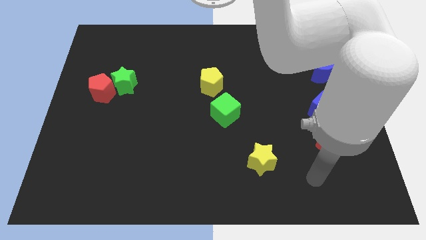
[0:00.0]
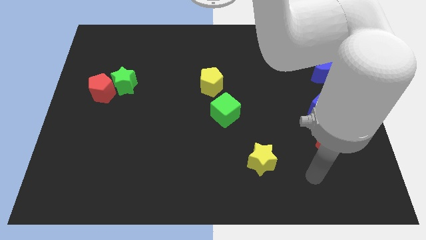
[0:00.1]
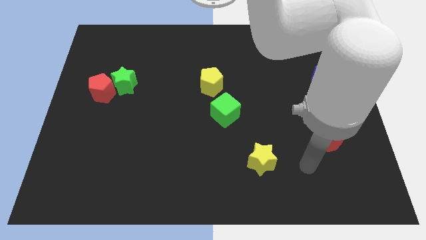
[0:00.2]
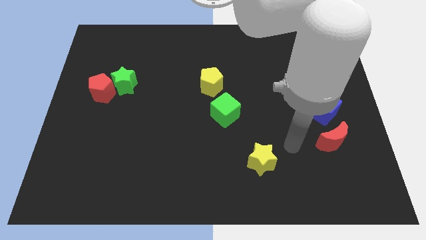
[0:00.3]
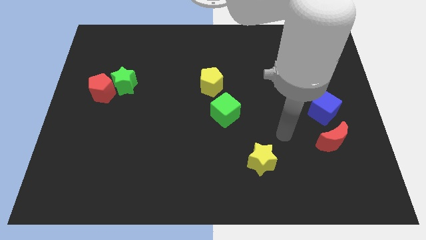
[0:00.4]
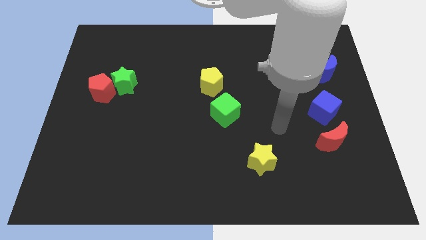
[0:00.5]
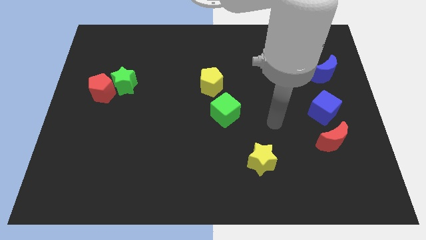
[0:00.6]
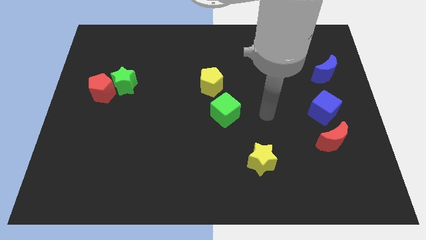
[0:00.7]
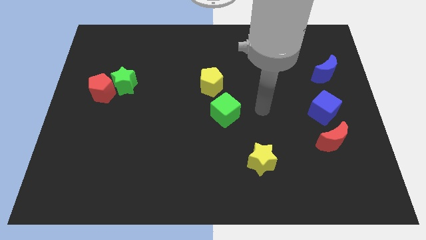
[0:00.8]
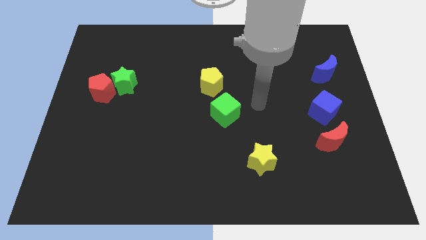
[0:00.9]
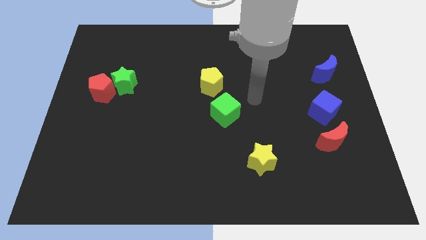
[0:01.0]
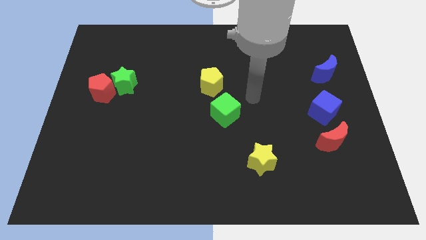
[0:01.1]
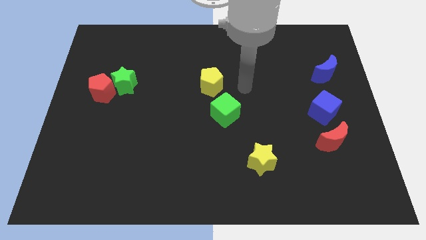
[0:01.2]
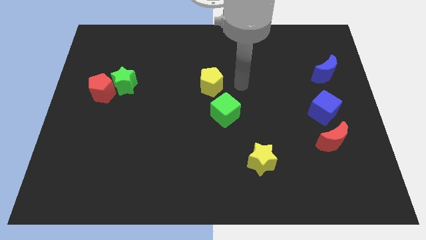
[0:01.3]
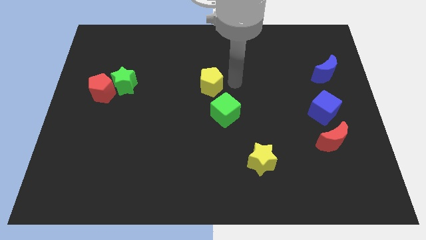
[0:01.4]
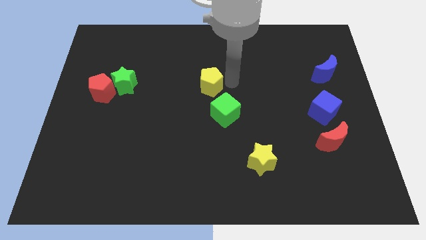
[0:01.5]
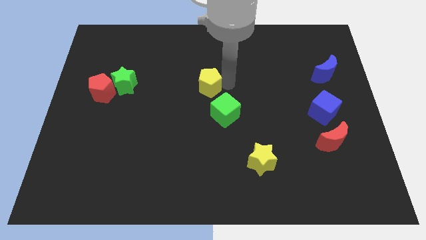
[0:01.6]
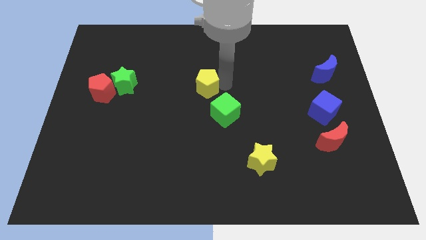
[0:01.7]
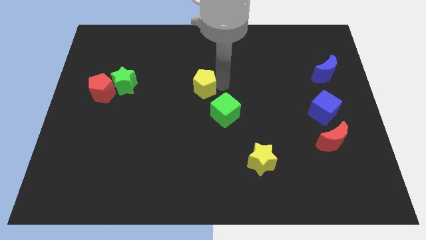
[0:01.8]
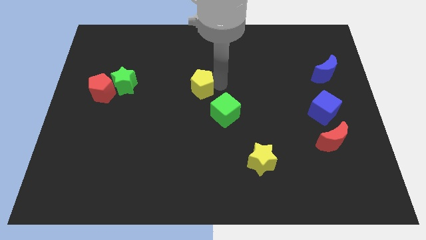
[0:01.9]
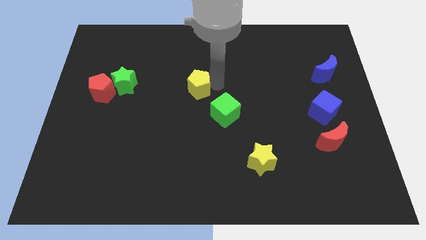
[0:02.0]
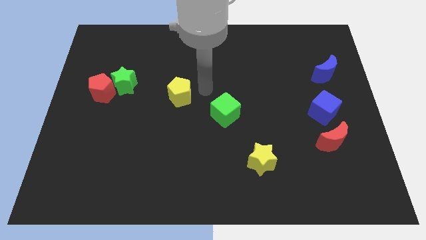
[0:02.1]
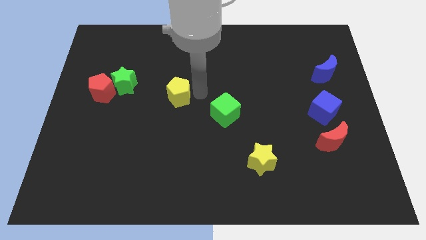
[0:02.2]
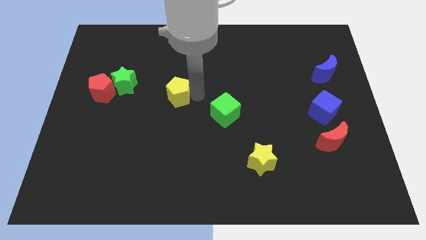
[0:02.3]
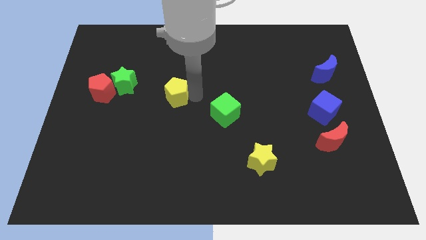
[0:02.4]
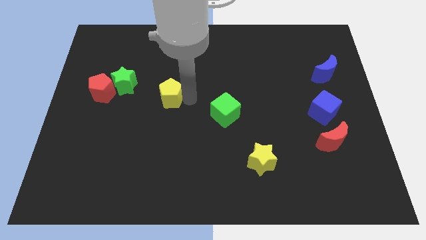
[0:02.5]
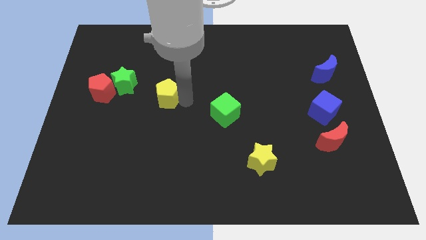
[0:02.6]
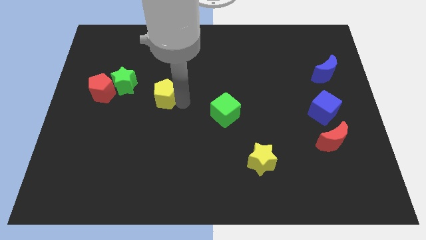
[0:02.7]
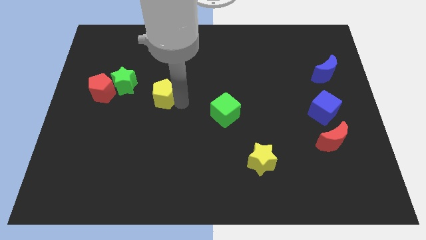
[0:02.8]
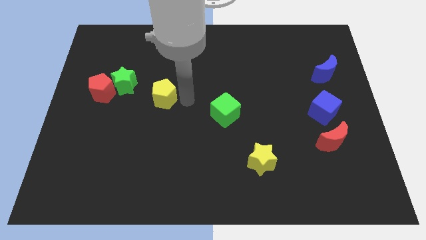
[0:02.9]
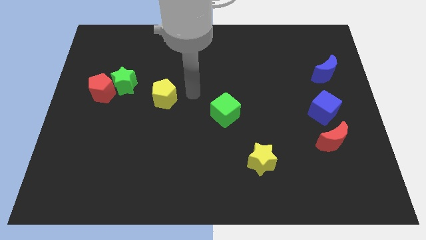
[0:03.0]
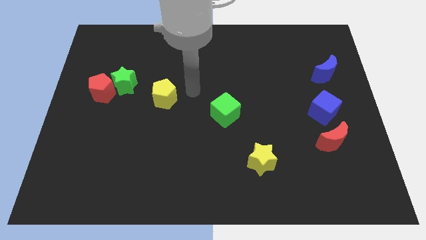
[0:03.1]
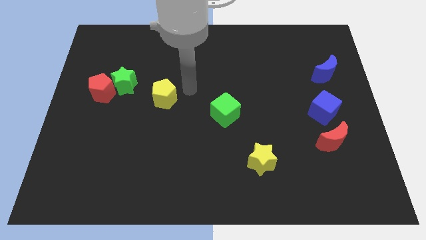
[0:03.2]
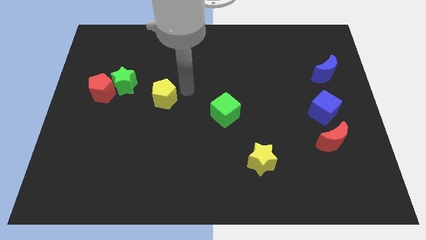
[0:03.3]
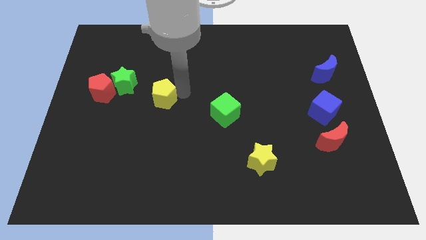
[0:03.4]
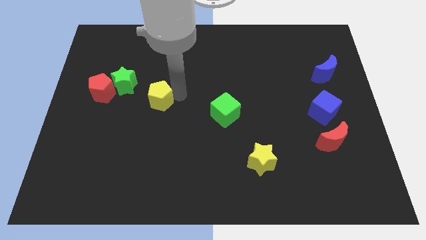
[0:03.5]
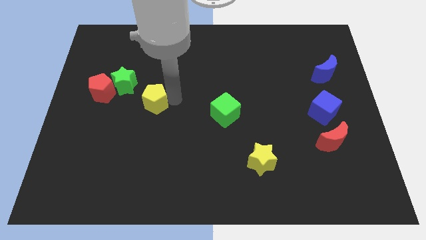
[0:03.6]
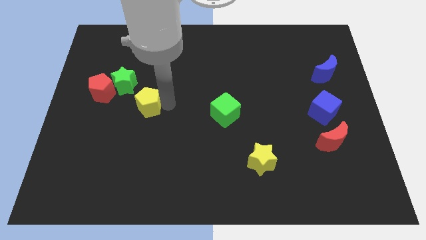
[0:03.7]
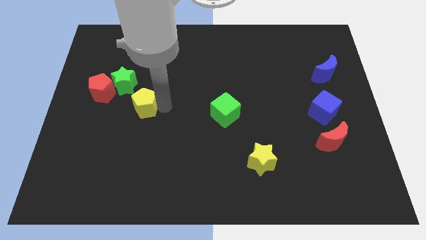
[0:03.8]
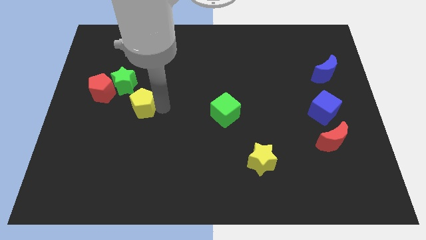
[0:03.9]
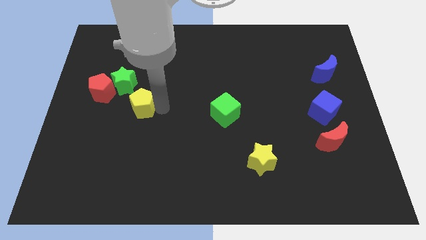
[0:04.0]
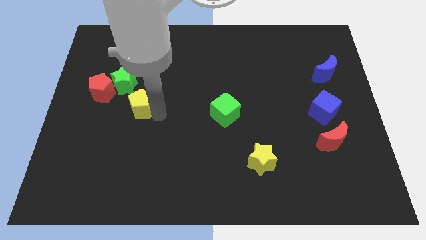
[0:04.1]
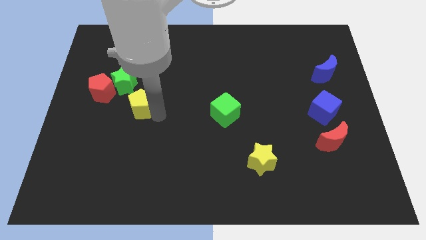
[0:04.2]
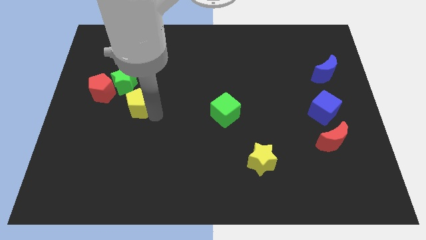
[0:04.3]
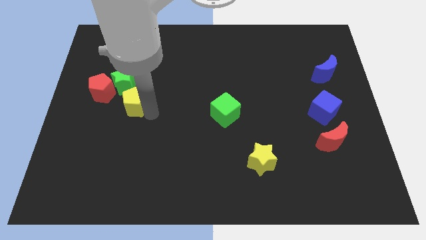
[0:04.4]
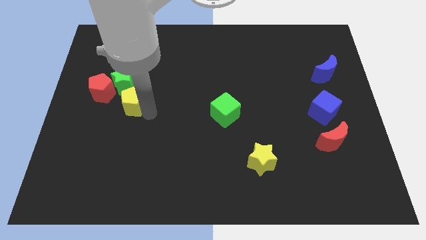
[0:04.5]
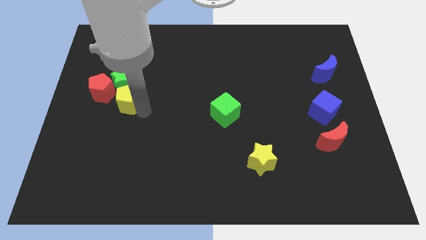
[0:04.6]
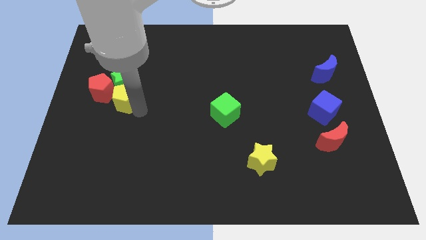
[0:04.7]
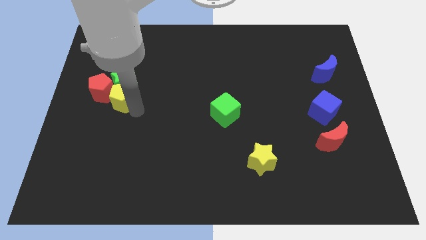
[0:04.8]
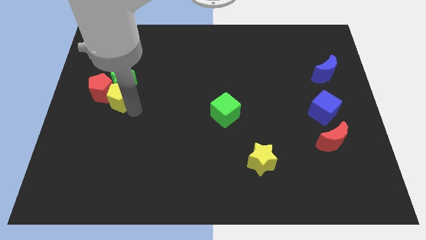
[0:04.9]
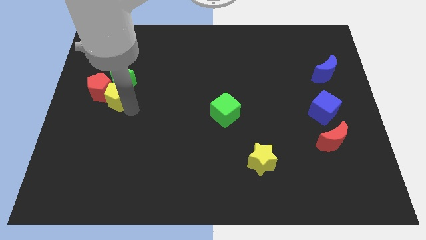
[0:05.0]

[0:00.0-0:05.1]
push the yellow pentagon close to the red pentagon

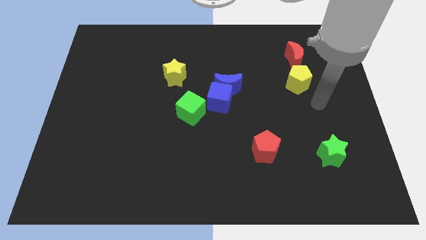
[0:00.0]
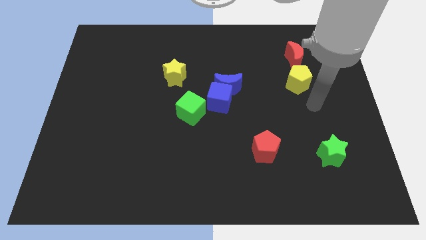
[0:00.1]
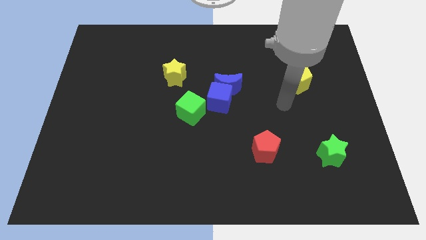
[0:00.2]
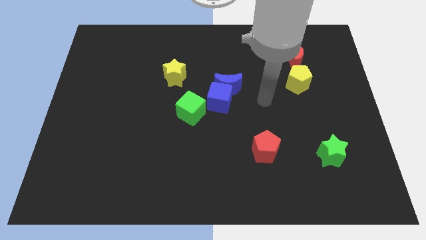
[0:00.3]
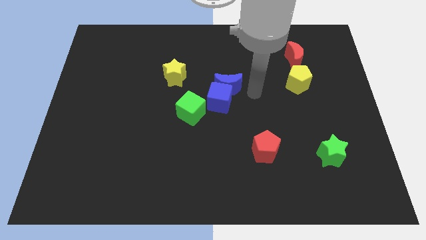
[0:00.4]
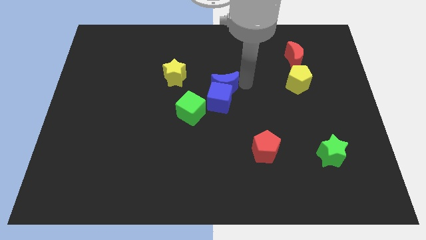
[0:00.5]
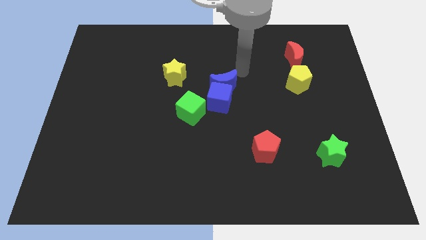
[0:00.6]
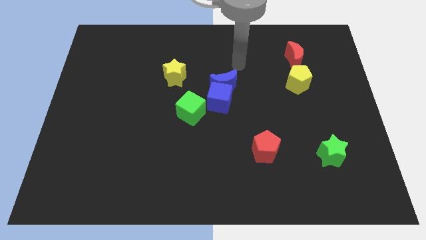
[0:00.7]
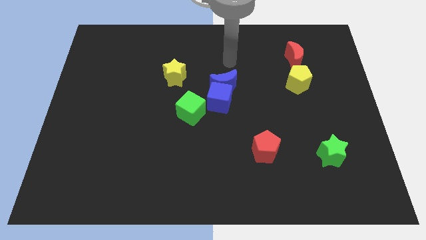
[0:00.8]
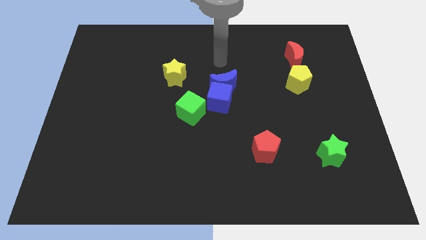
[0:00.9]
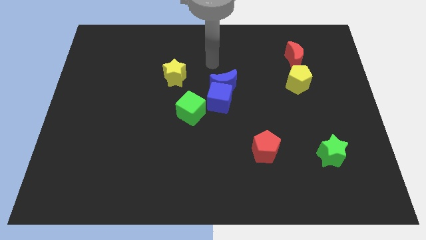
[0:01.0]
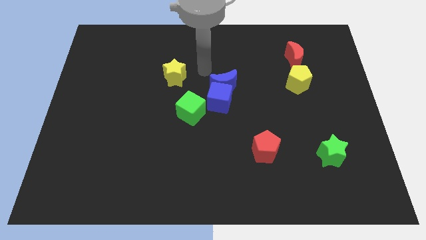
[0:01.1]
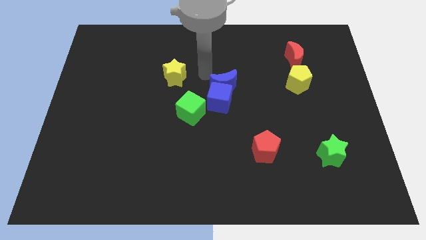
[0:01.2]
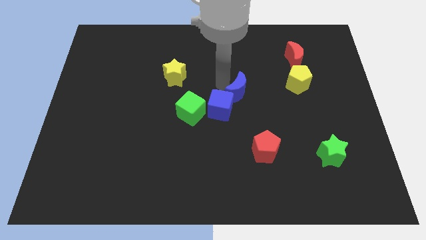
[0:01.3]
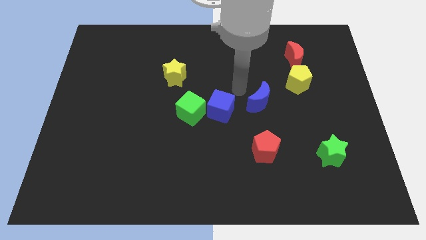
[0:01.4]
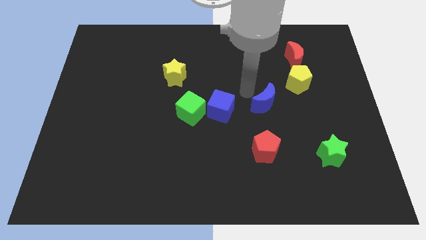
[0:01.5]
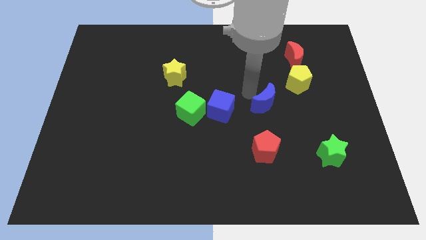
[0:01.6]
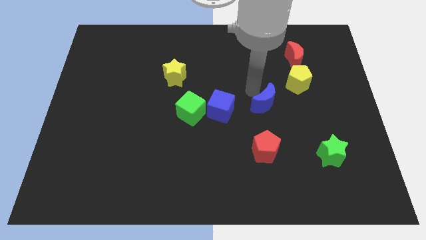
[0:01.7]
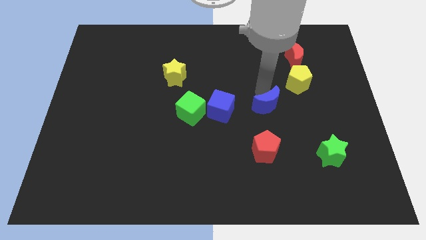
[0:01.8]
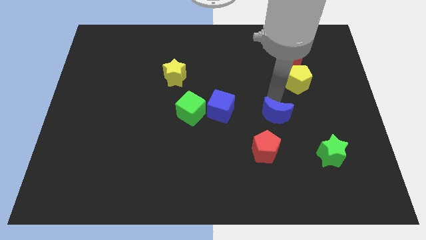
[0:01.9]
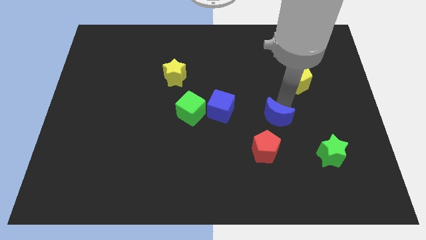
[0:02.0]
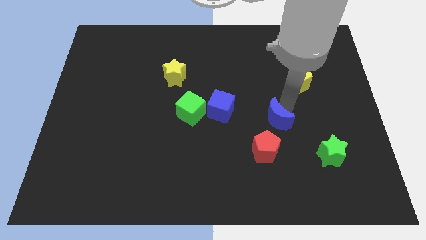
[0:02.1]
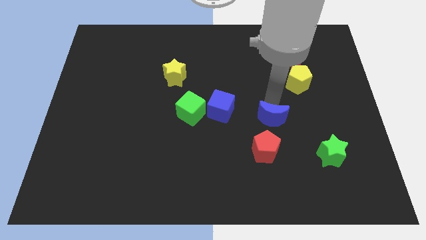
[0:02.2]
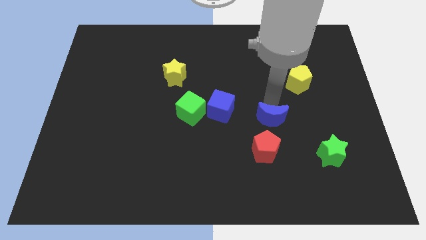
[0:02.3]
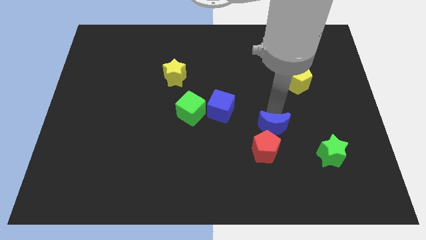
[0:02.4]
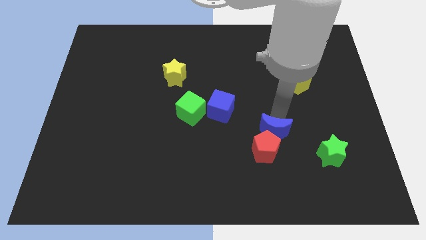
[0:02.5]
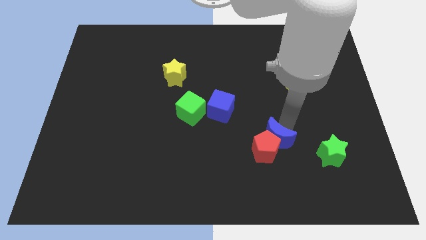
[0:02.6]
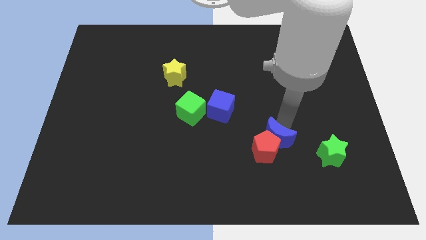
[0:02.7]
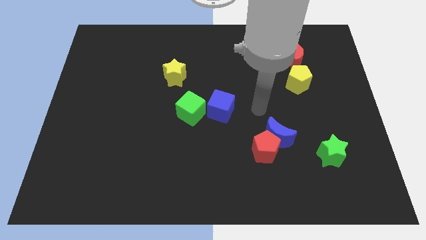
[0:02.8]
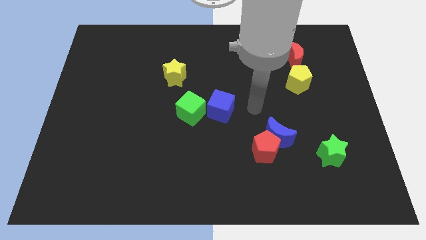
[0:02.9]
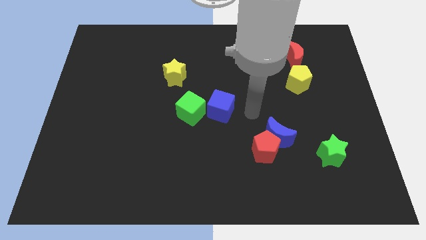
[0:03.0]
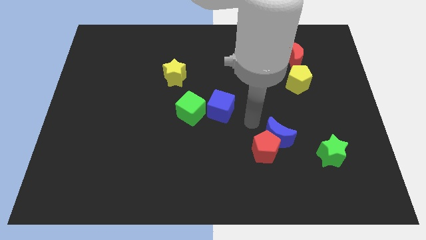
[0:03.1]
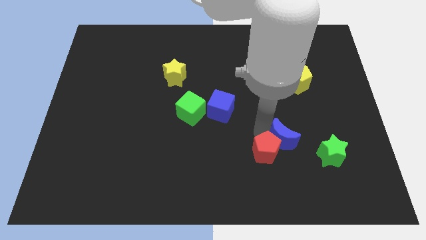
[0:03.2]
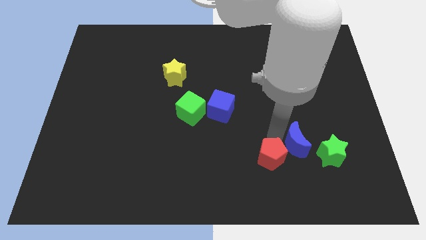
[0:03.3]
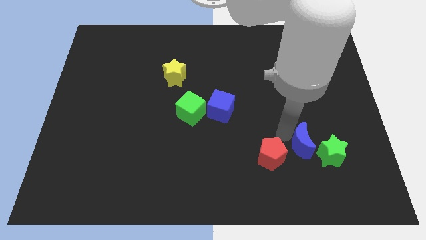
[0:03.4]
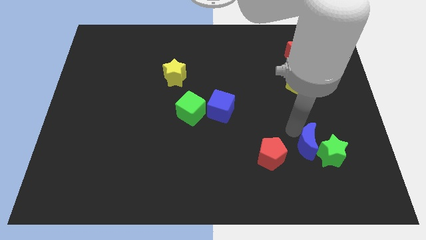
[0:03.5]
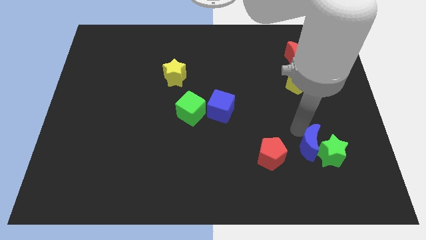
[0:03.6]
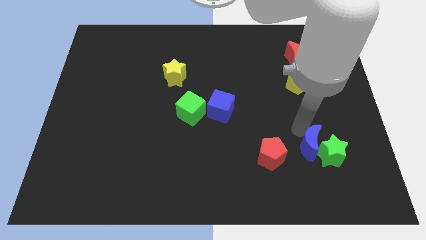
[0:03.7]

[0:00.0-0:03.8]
push the blue moon towards the green star
